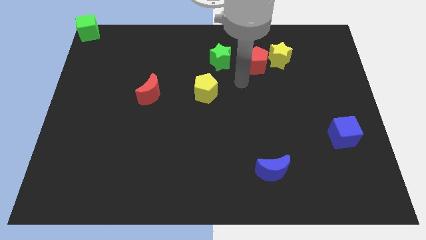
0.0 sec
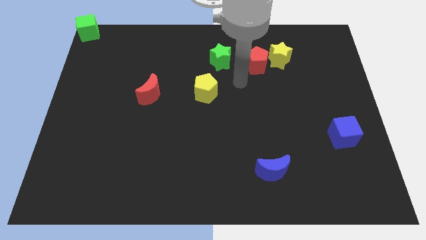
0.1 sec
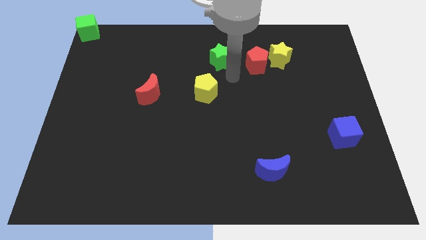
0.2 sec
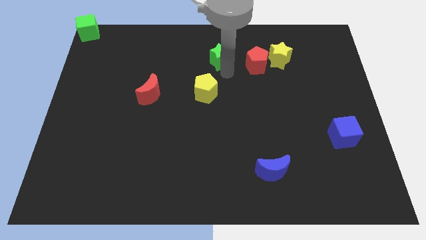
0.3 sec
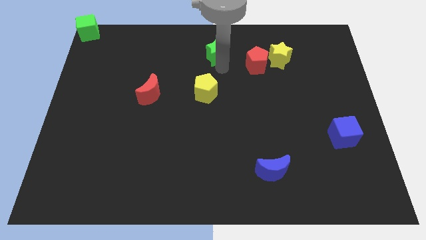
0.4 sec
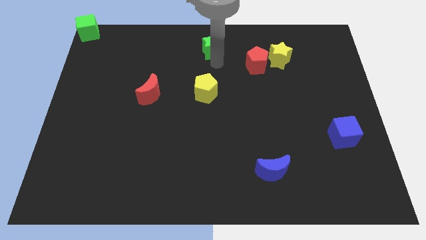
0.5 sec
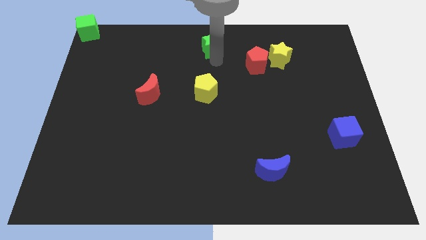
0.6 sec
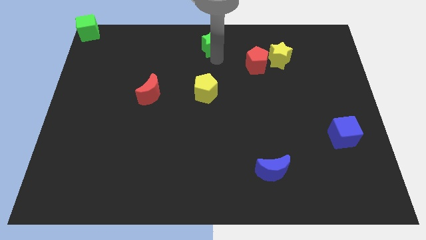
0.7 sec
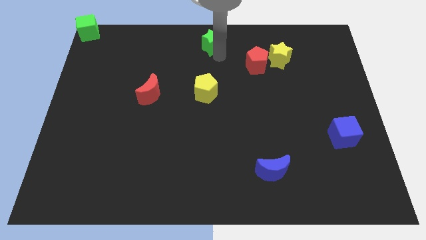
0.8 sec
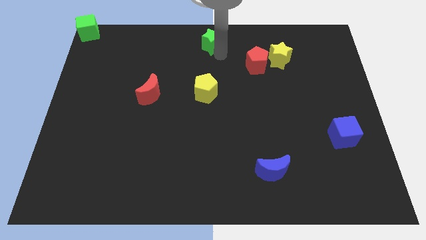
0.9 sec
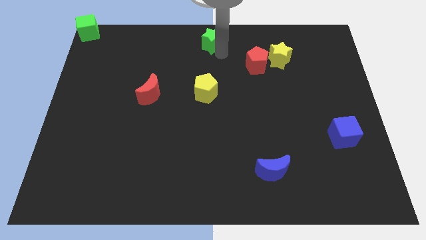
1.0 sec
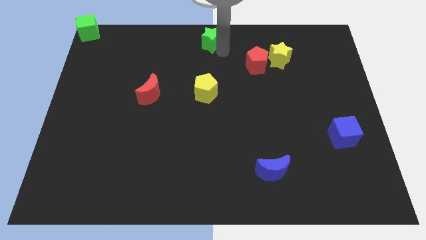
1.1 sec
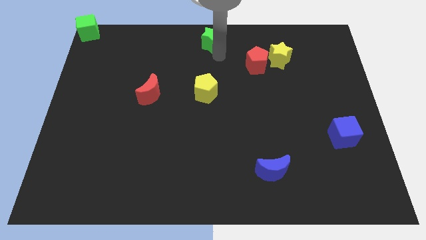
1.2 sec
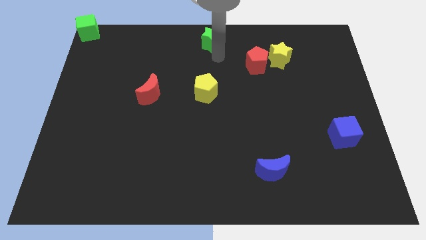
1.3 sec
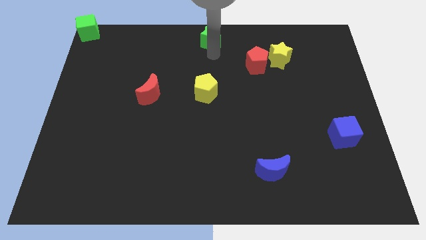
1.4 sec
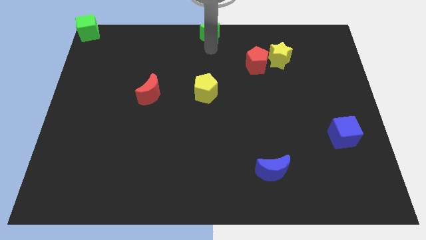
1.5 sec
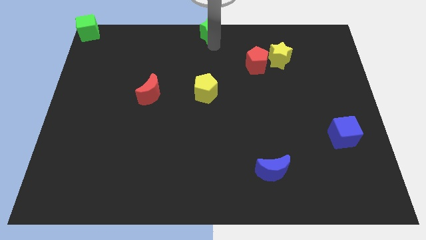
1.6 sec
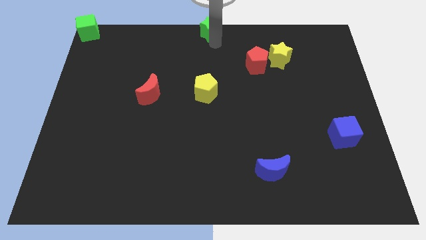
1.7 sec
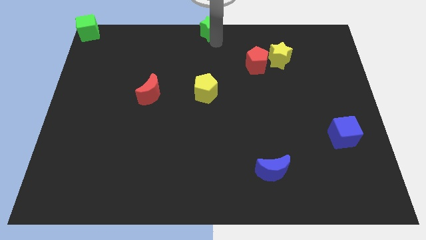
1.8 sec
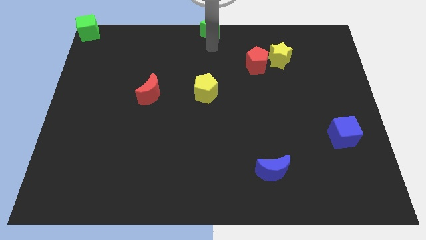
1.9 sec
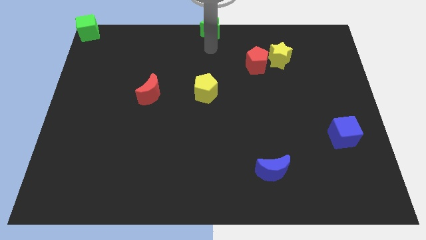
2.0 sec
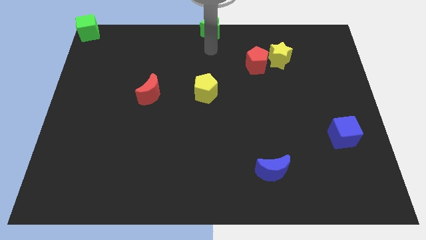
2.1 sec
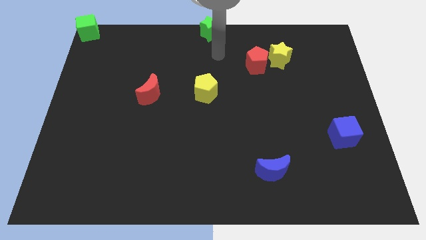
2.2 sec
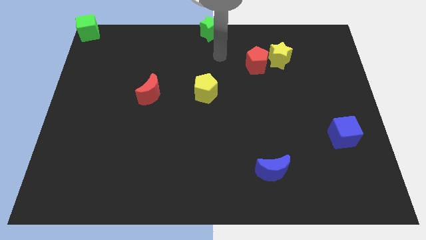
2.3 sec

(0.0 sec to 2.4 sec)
place green star towards top middle end of the board

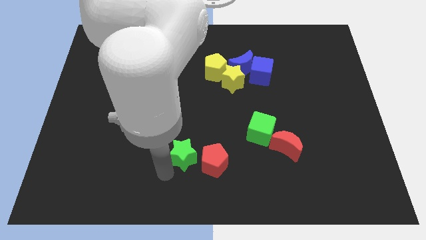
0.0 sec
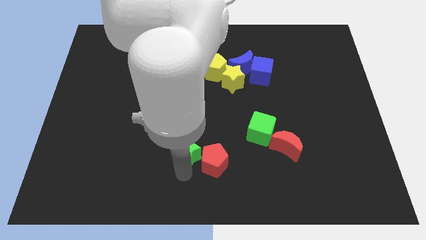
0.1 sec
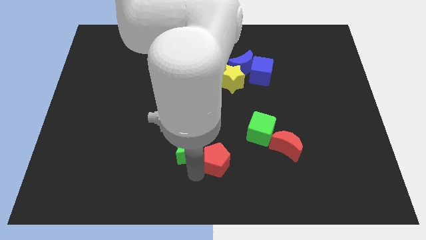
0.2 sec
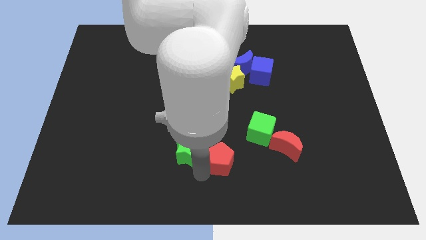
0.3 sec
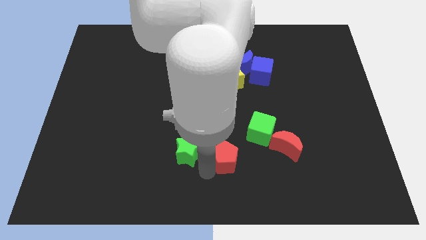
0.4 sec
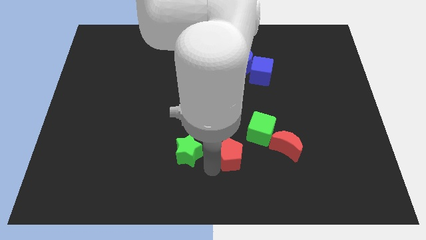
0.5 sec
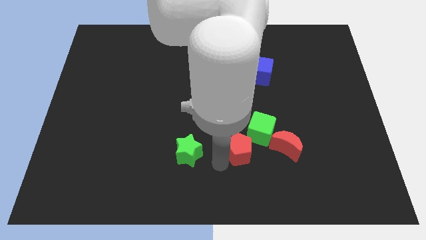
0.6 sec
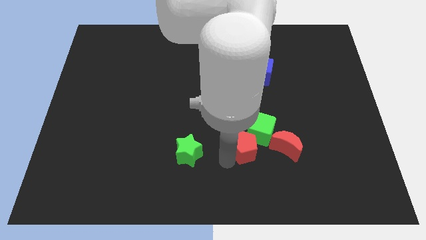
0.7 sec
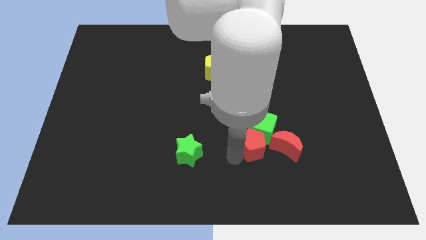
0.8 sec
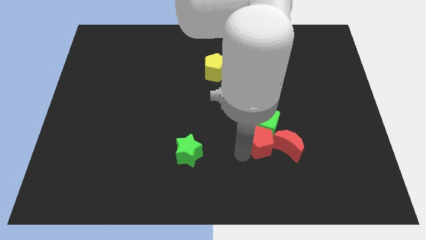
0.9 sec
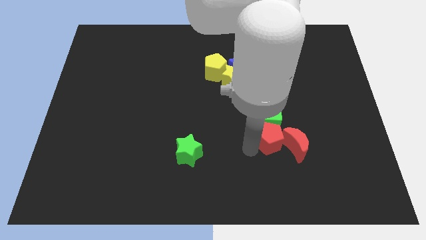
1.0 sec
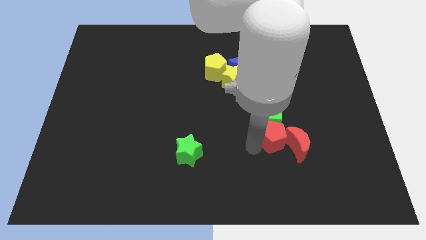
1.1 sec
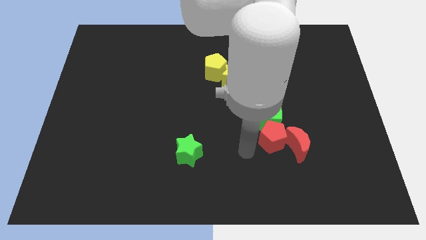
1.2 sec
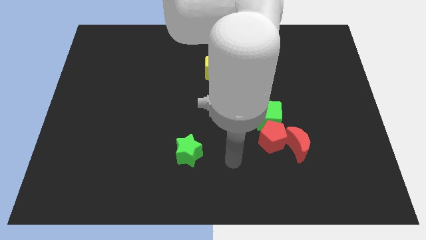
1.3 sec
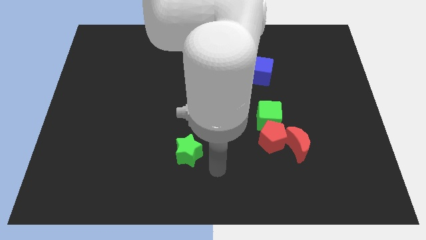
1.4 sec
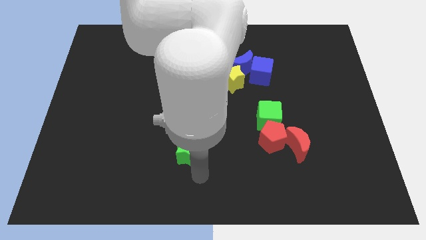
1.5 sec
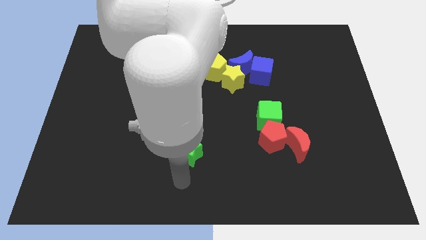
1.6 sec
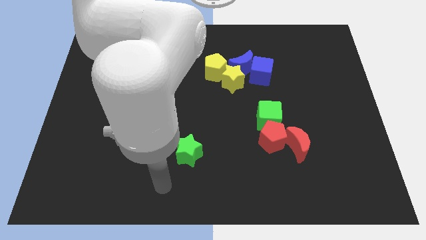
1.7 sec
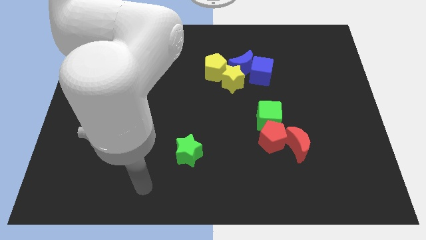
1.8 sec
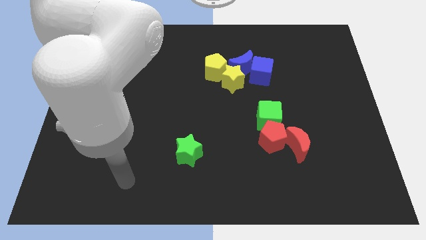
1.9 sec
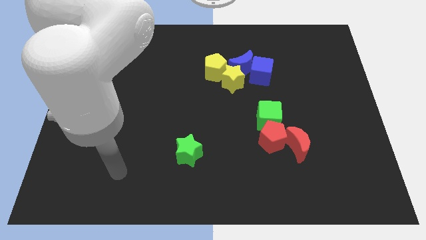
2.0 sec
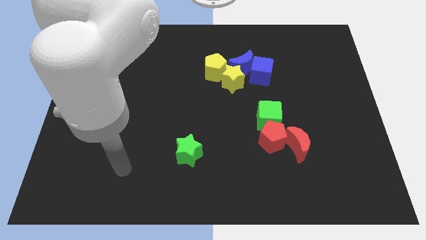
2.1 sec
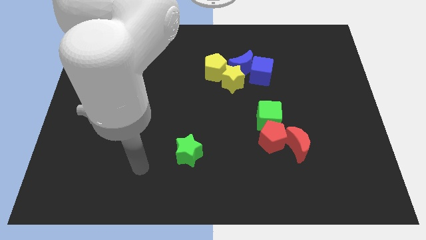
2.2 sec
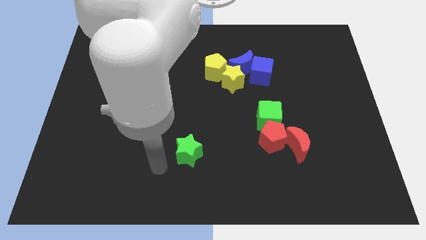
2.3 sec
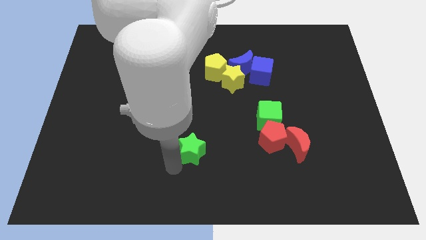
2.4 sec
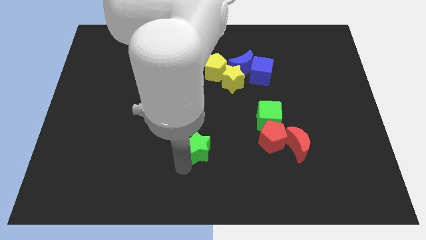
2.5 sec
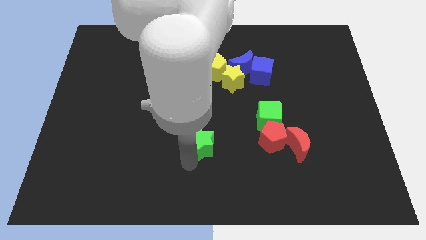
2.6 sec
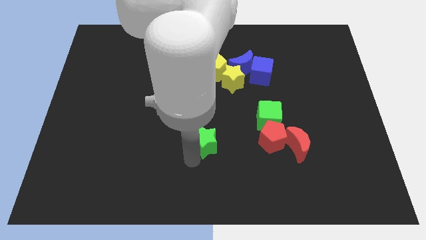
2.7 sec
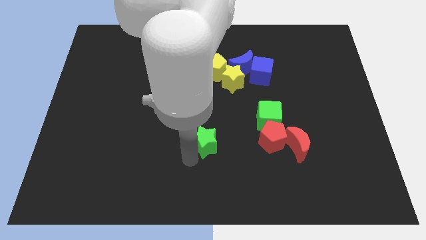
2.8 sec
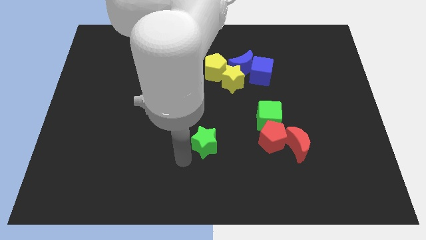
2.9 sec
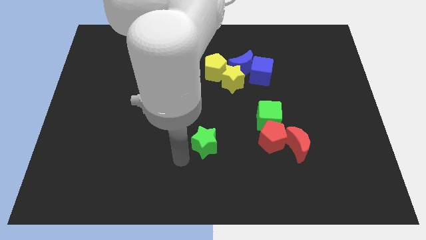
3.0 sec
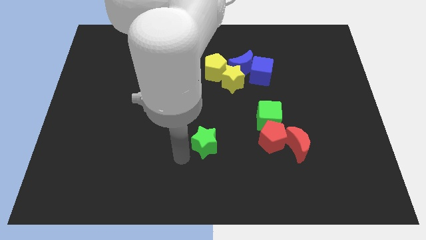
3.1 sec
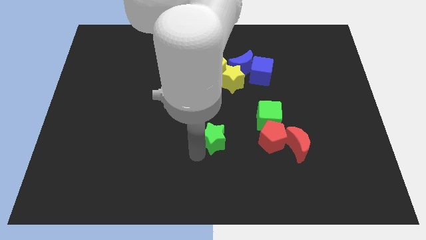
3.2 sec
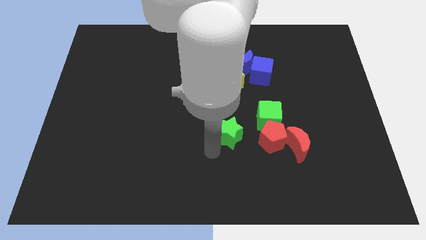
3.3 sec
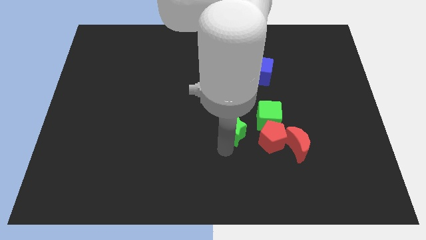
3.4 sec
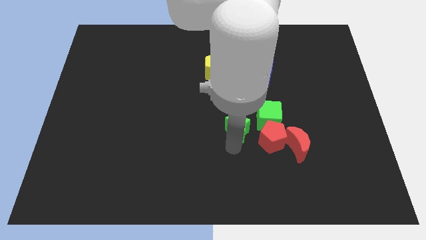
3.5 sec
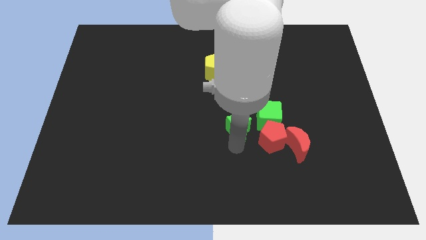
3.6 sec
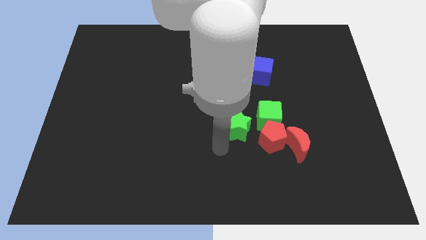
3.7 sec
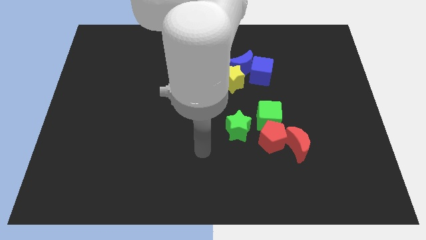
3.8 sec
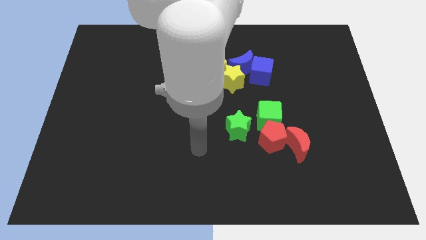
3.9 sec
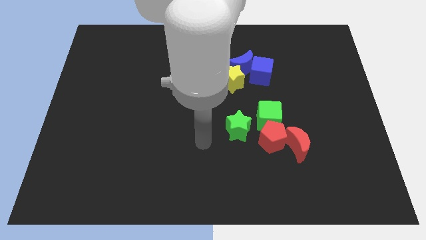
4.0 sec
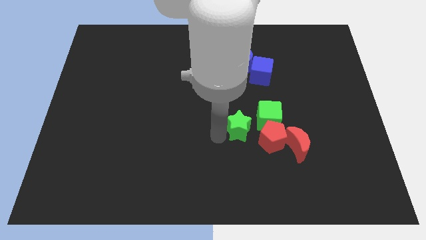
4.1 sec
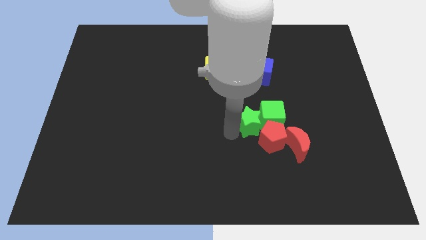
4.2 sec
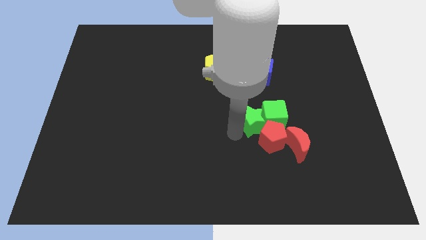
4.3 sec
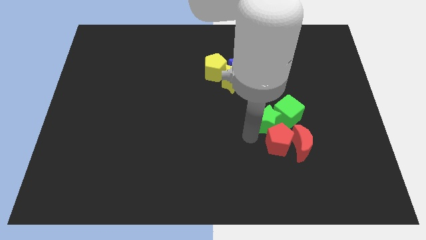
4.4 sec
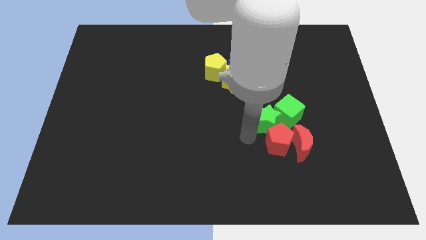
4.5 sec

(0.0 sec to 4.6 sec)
push green star into the green cube

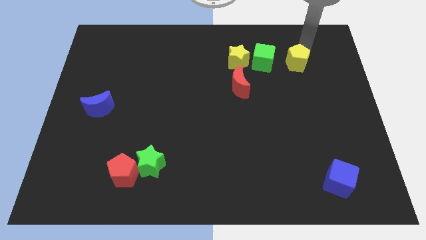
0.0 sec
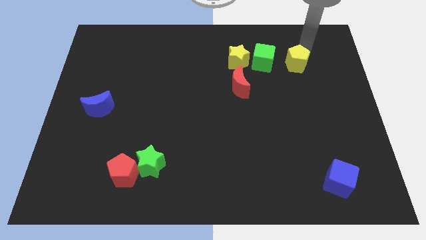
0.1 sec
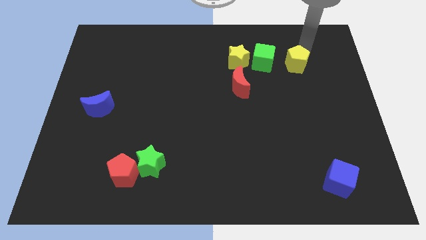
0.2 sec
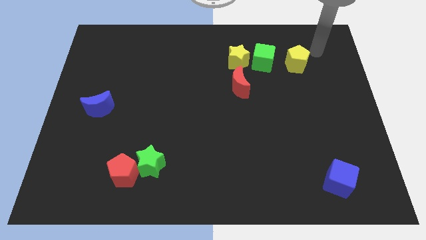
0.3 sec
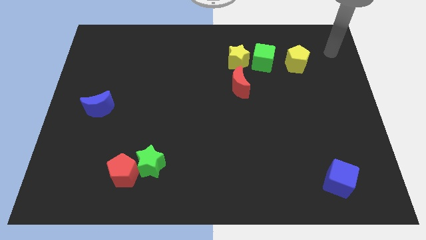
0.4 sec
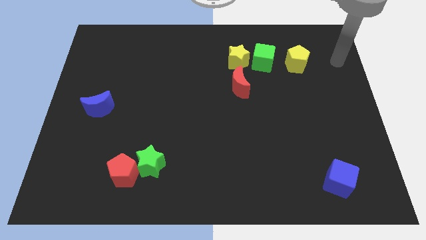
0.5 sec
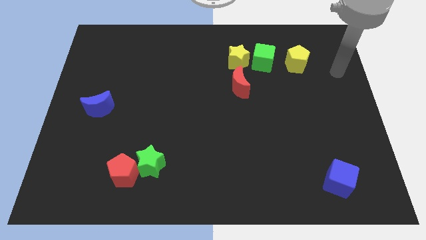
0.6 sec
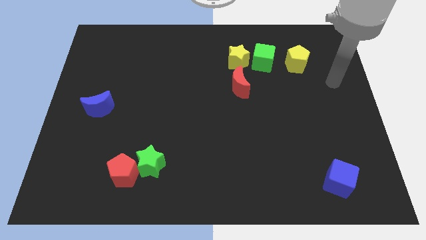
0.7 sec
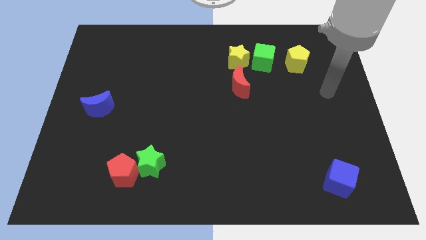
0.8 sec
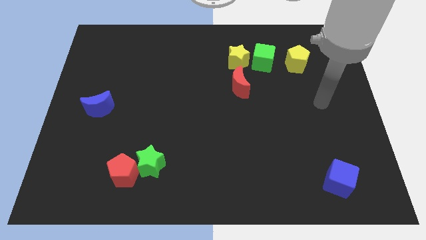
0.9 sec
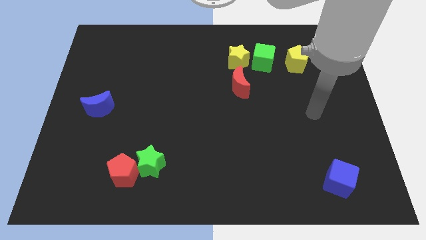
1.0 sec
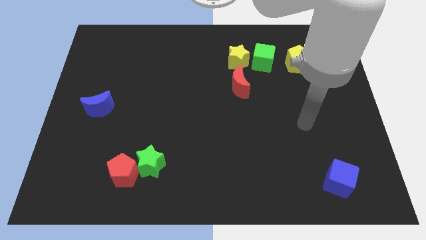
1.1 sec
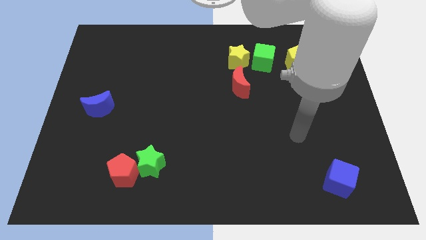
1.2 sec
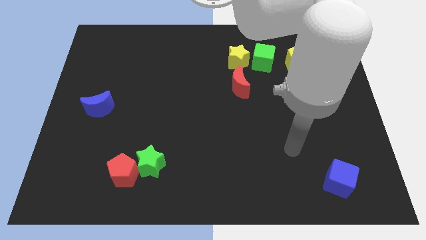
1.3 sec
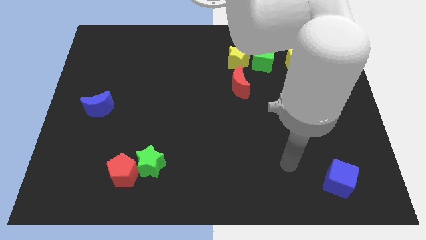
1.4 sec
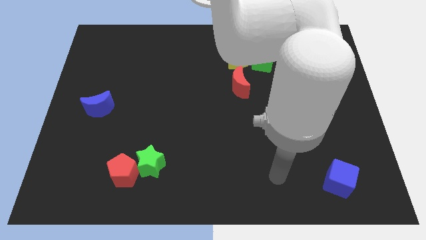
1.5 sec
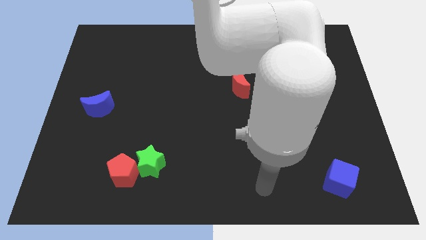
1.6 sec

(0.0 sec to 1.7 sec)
move the arm away from the yellow pentagon

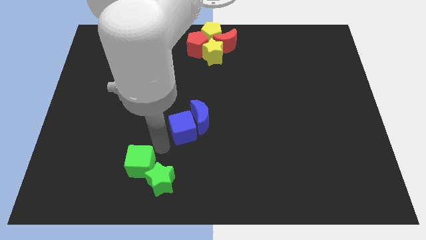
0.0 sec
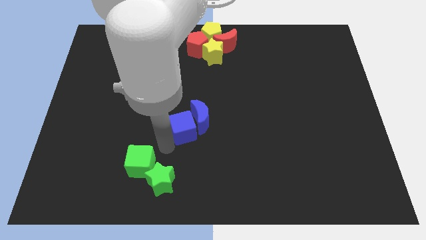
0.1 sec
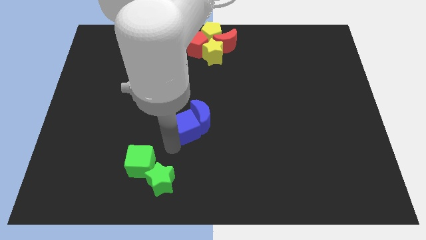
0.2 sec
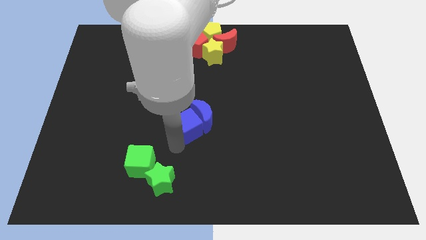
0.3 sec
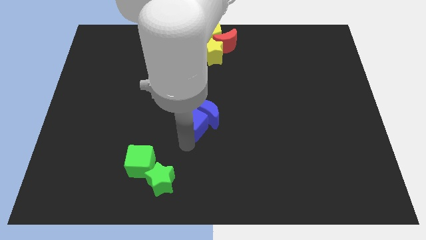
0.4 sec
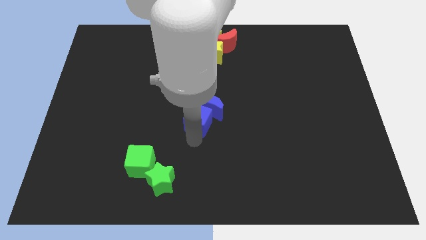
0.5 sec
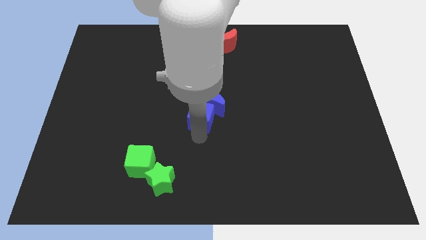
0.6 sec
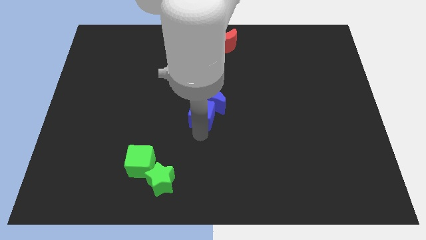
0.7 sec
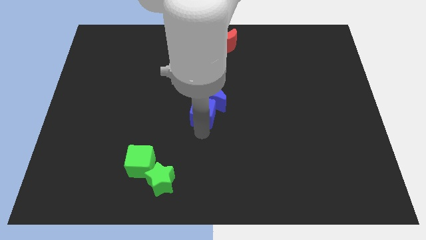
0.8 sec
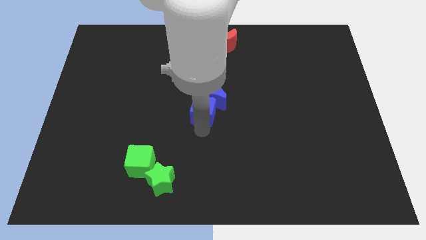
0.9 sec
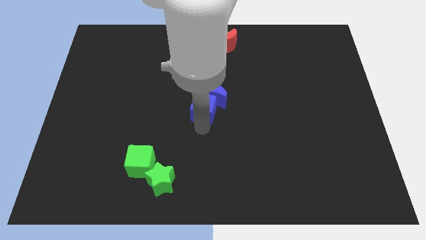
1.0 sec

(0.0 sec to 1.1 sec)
push the blue blocks to the center of the board
